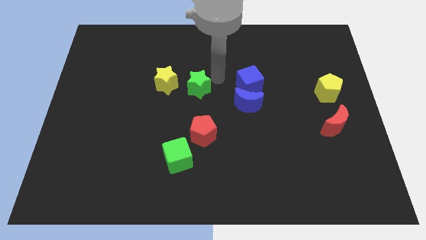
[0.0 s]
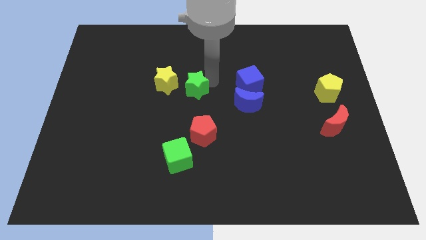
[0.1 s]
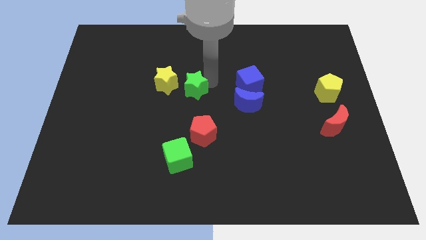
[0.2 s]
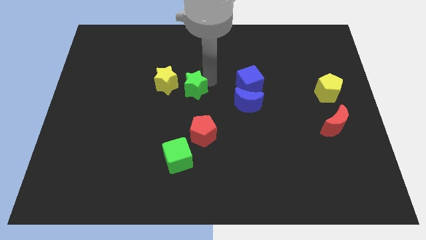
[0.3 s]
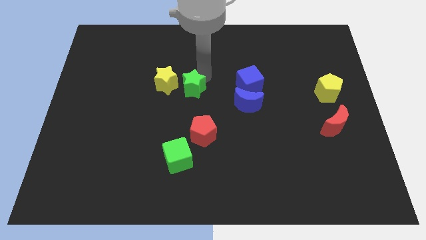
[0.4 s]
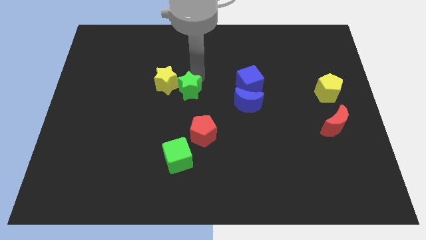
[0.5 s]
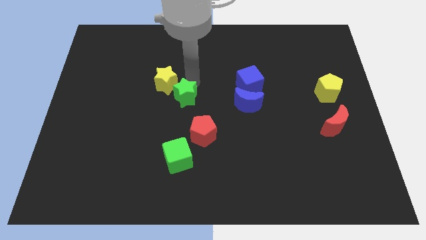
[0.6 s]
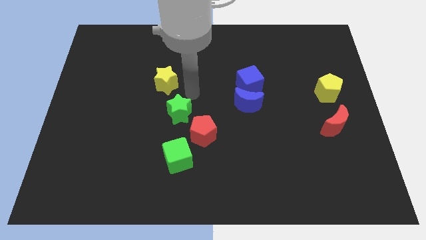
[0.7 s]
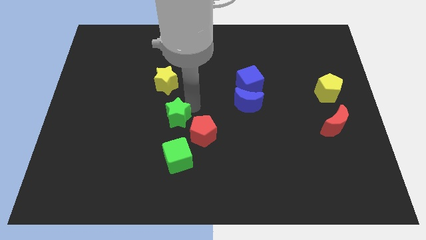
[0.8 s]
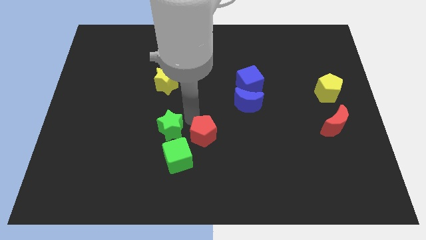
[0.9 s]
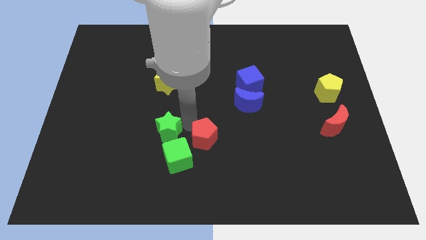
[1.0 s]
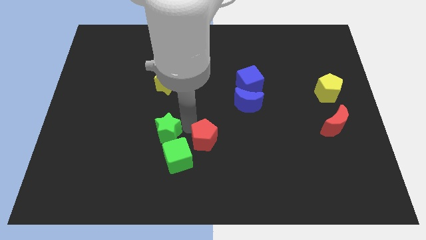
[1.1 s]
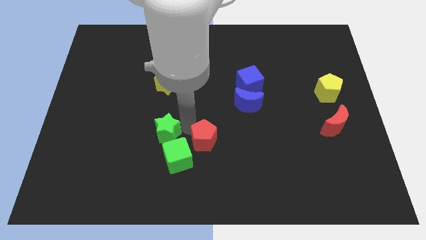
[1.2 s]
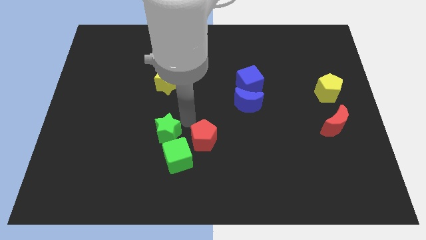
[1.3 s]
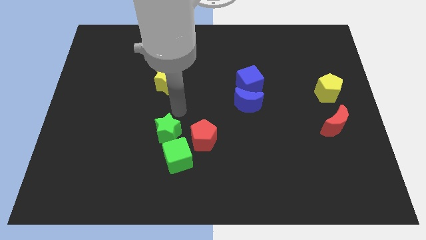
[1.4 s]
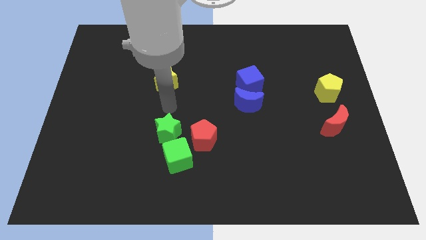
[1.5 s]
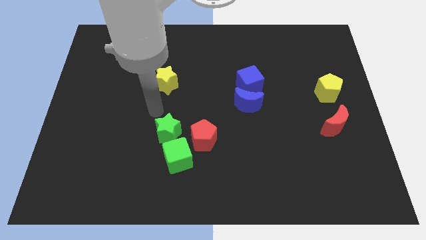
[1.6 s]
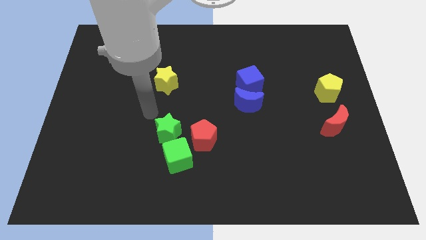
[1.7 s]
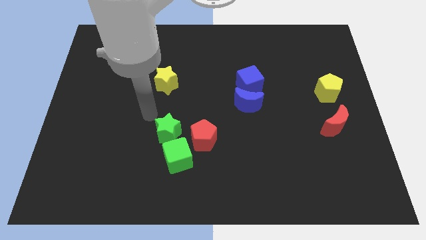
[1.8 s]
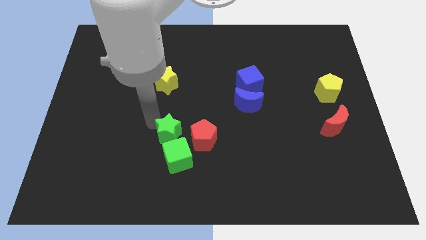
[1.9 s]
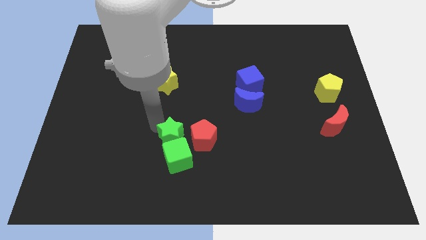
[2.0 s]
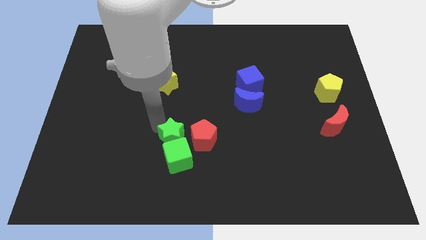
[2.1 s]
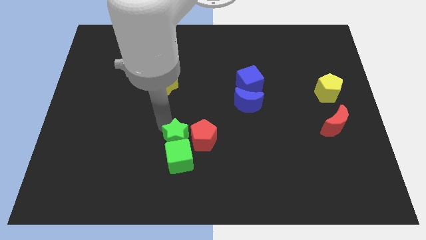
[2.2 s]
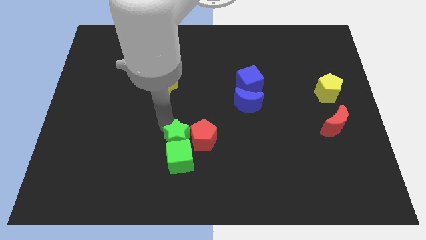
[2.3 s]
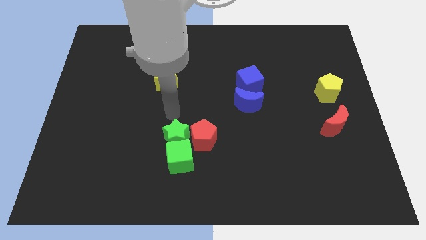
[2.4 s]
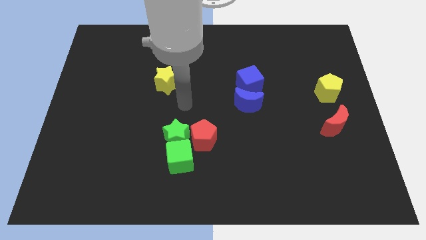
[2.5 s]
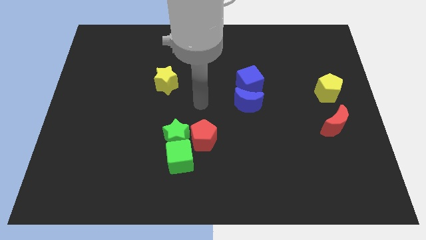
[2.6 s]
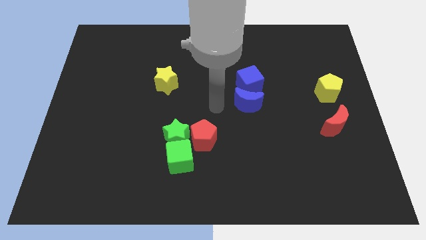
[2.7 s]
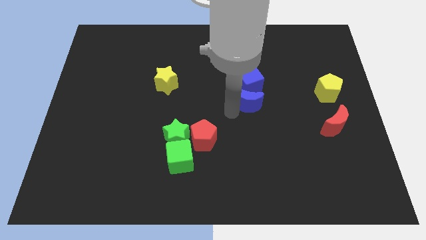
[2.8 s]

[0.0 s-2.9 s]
push green star in to green cube

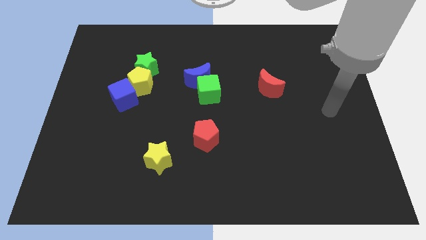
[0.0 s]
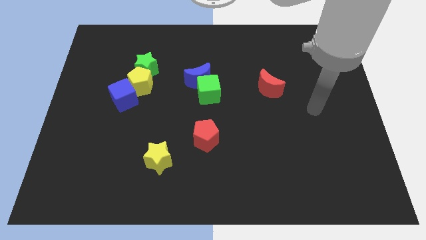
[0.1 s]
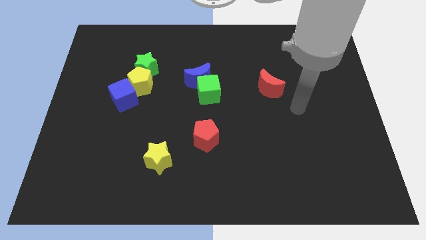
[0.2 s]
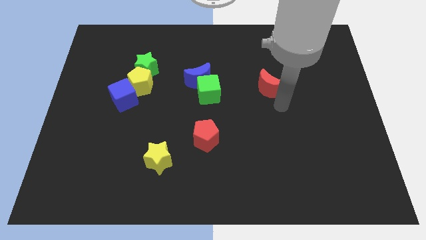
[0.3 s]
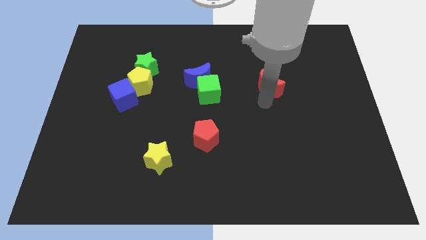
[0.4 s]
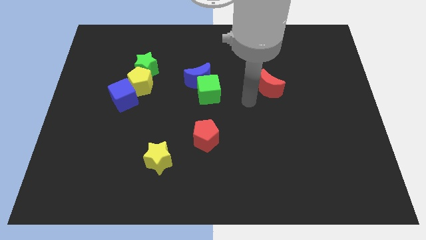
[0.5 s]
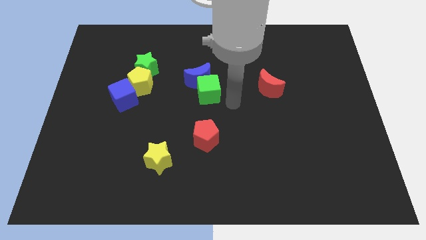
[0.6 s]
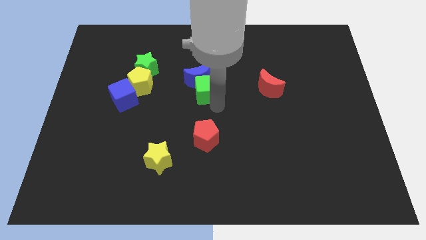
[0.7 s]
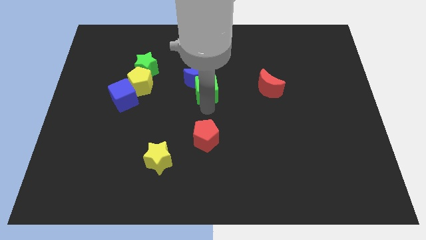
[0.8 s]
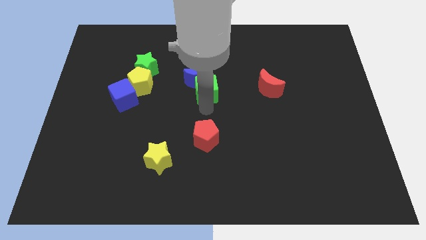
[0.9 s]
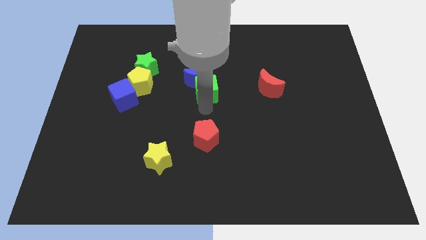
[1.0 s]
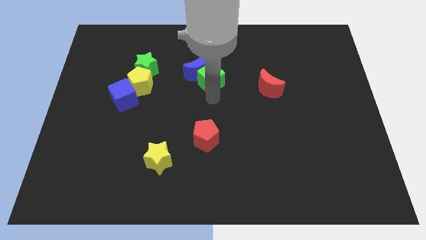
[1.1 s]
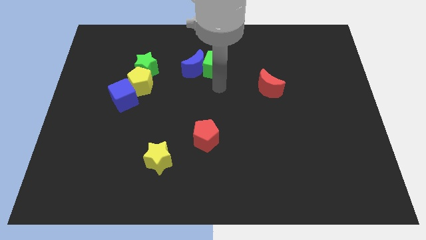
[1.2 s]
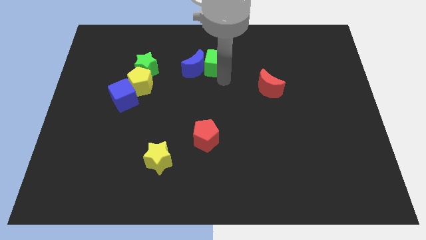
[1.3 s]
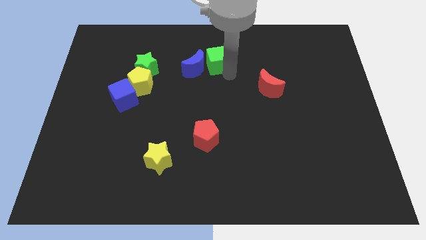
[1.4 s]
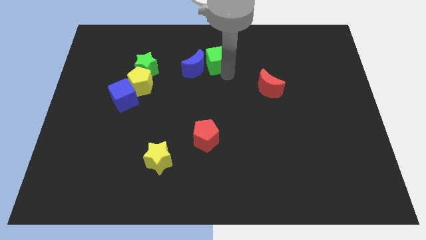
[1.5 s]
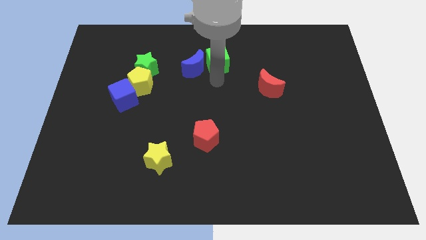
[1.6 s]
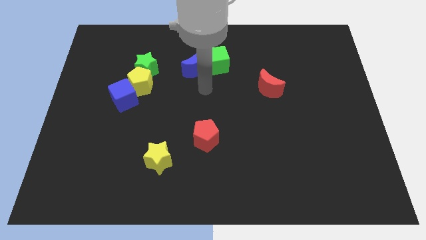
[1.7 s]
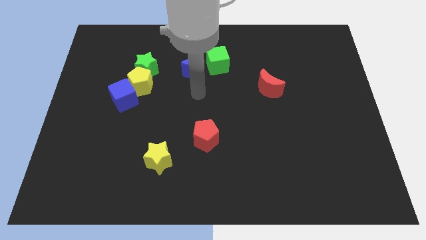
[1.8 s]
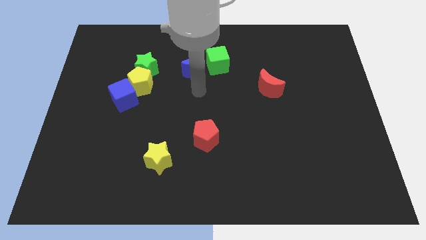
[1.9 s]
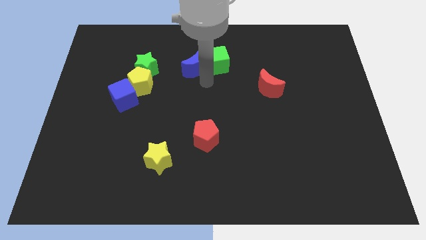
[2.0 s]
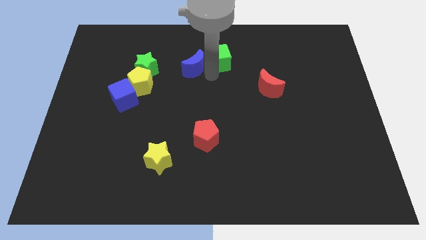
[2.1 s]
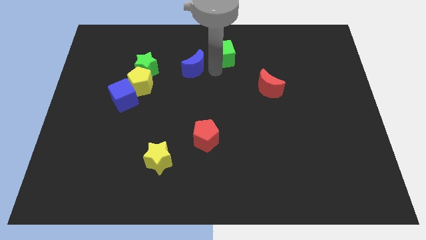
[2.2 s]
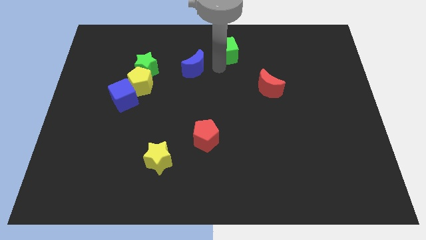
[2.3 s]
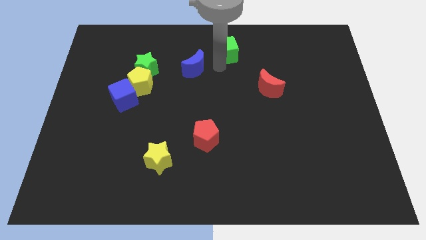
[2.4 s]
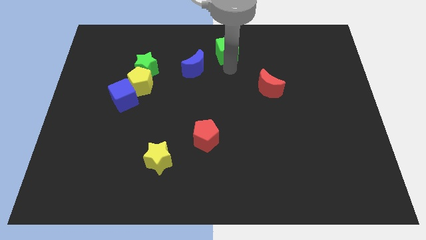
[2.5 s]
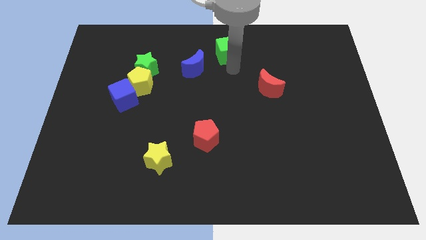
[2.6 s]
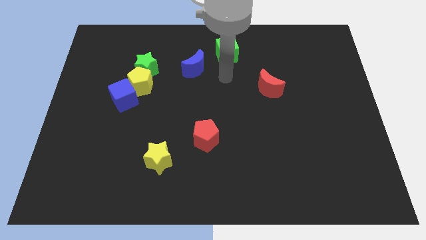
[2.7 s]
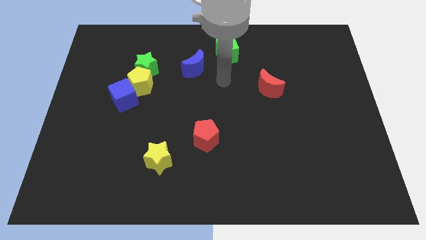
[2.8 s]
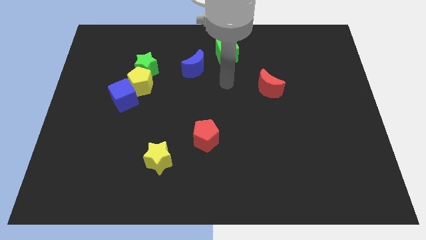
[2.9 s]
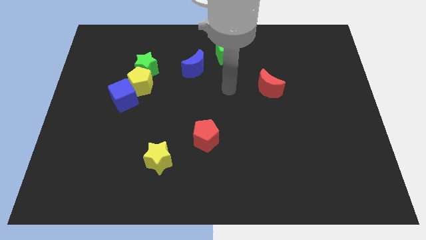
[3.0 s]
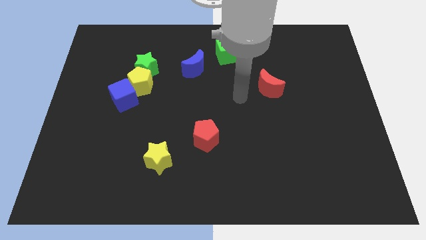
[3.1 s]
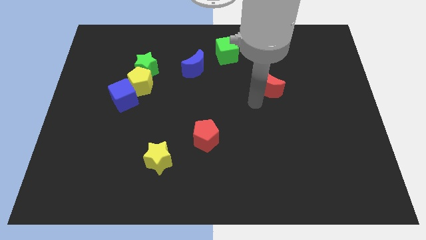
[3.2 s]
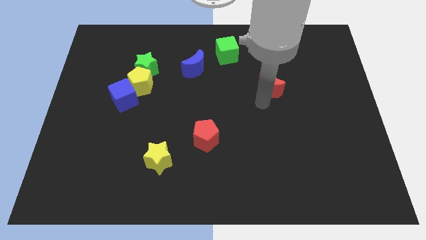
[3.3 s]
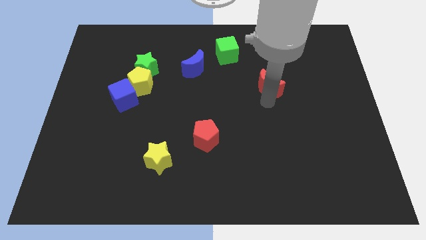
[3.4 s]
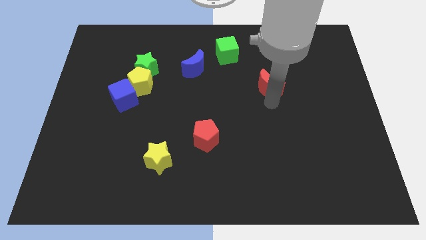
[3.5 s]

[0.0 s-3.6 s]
move green cube to the top center of the board

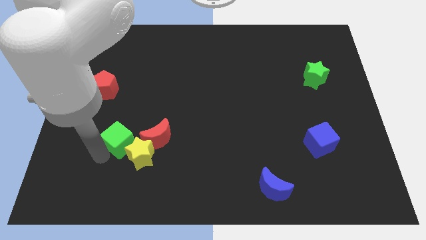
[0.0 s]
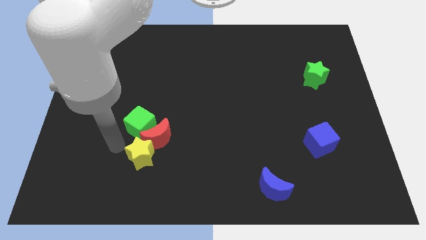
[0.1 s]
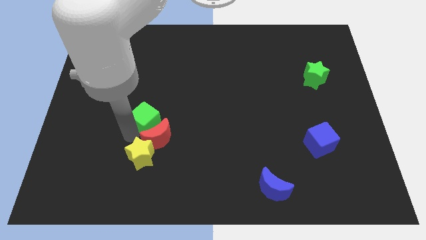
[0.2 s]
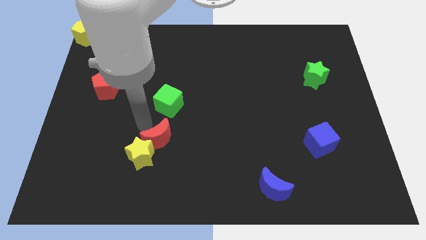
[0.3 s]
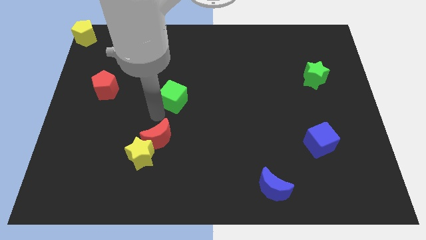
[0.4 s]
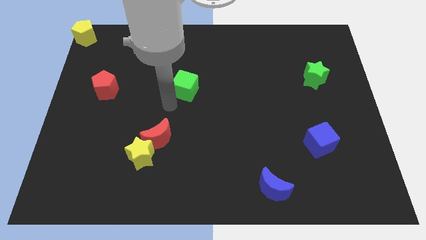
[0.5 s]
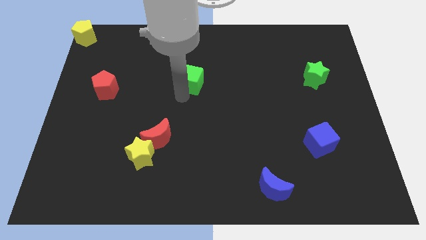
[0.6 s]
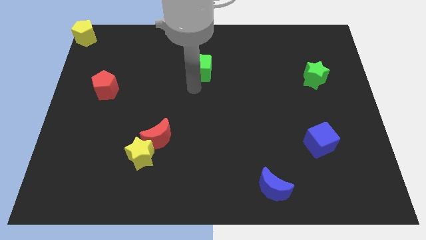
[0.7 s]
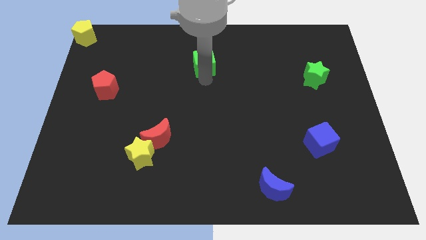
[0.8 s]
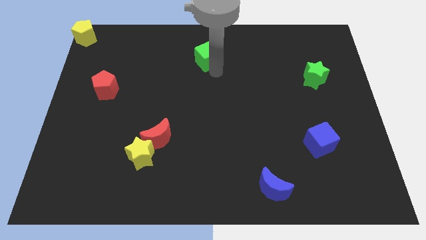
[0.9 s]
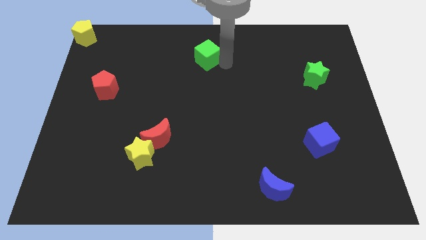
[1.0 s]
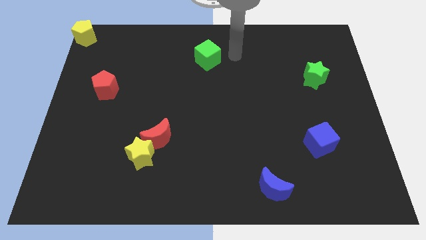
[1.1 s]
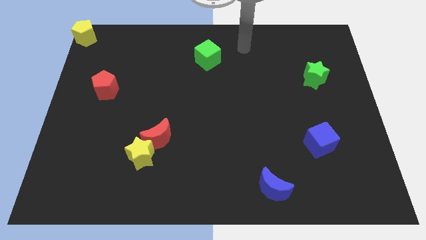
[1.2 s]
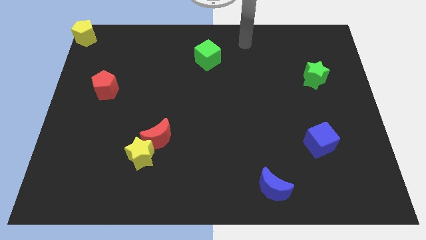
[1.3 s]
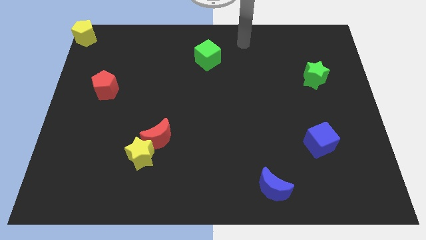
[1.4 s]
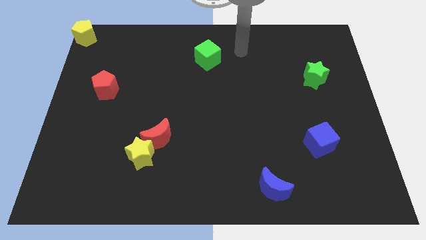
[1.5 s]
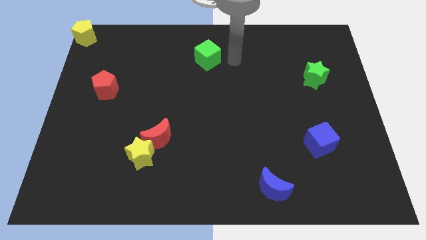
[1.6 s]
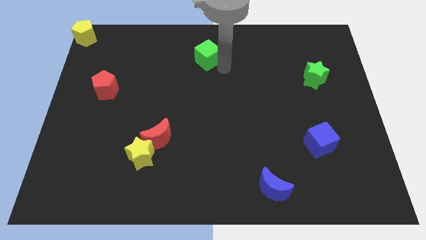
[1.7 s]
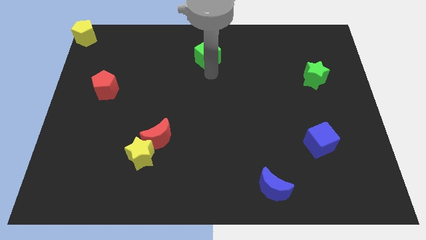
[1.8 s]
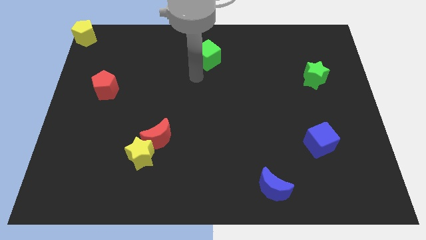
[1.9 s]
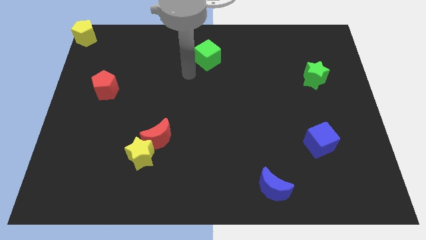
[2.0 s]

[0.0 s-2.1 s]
move the green cube towards the top center

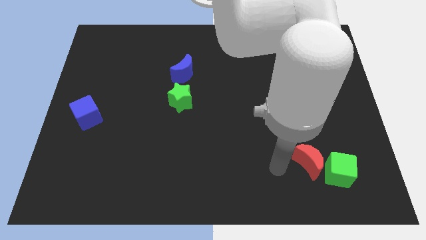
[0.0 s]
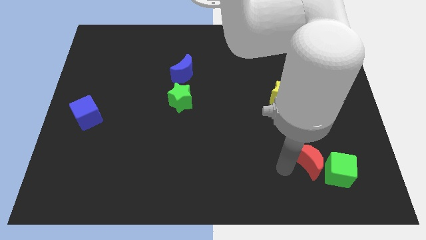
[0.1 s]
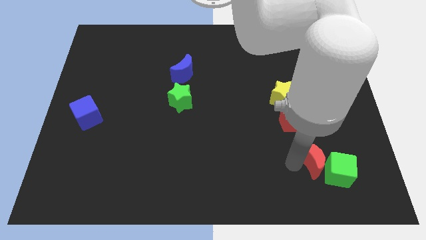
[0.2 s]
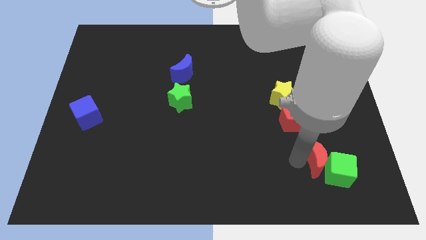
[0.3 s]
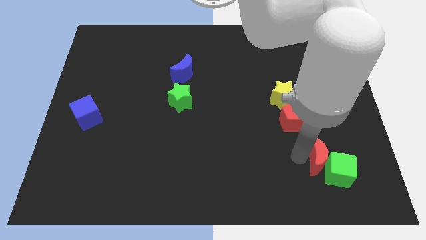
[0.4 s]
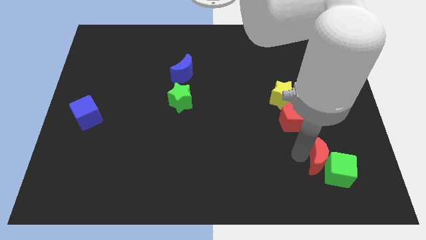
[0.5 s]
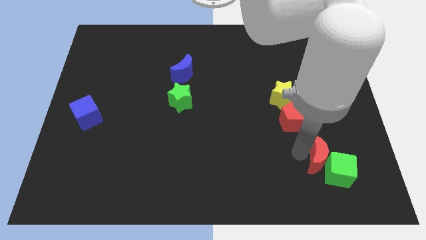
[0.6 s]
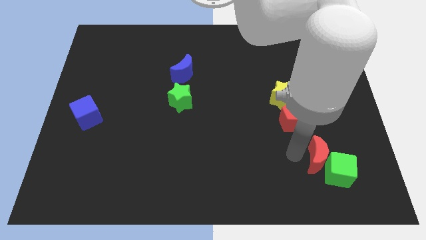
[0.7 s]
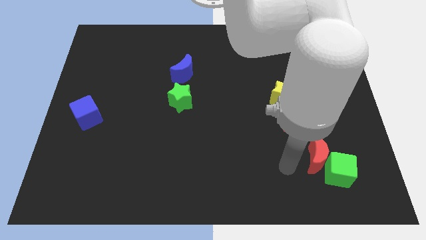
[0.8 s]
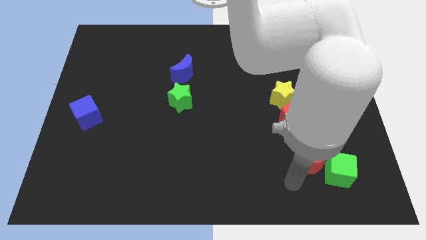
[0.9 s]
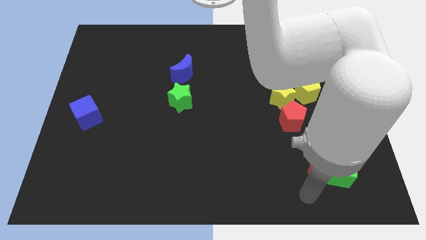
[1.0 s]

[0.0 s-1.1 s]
touch your arm to the left of the red moon
